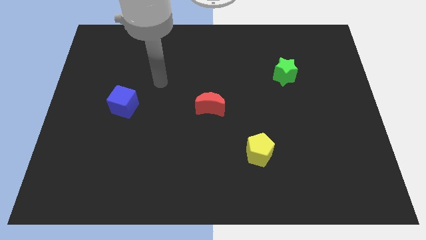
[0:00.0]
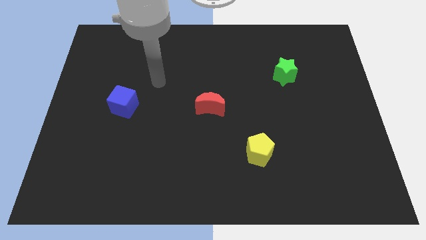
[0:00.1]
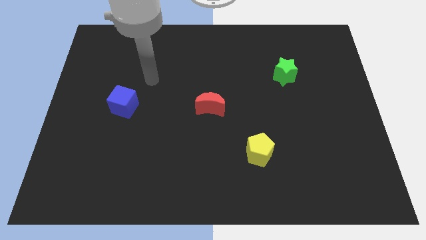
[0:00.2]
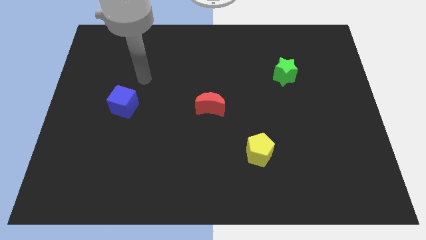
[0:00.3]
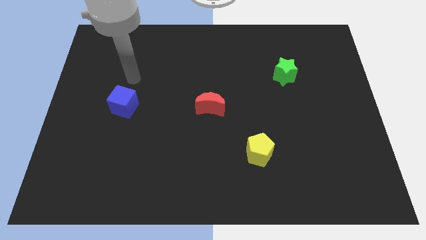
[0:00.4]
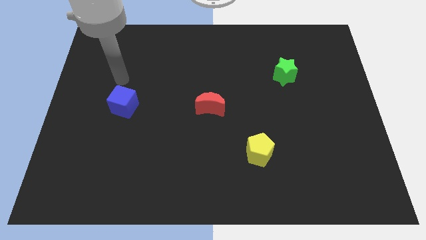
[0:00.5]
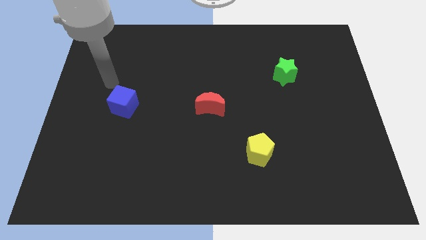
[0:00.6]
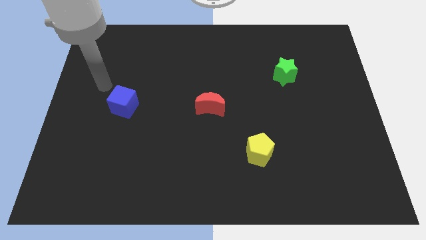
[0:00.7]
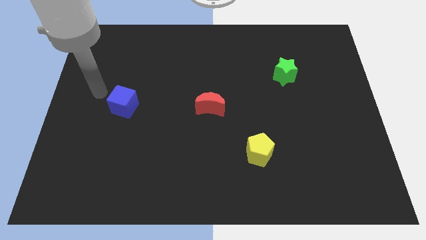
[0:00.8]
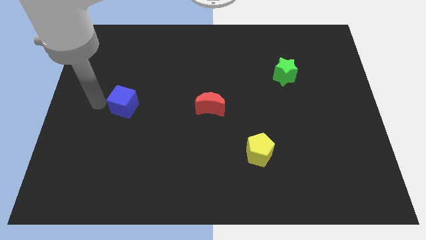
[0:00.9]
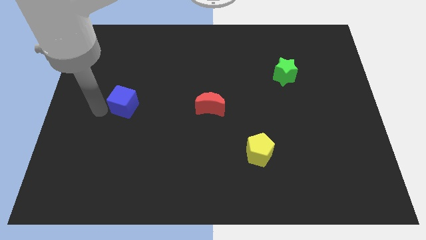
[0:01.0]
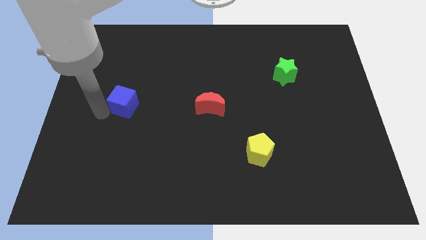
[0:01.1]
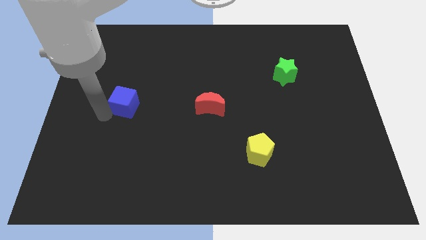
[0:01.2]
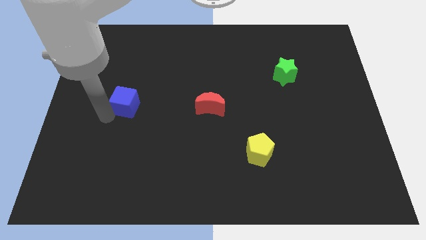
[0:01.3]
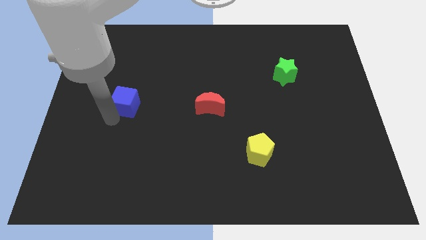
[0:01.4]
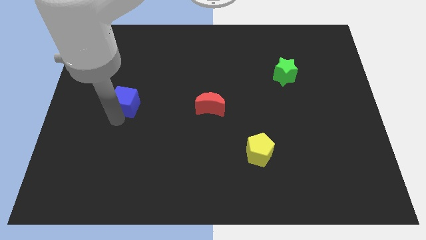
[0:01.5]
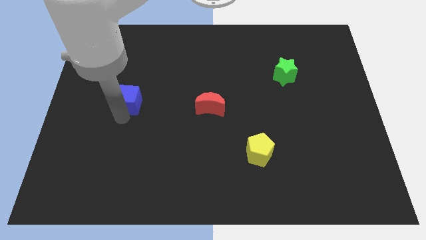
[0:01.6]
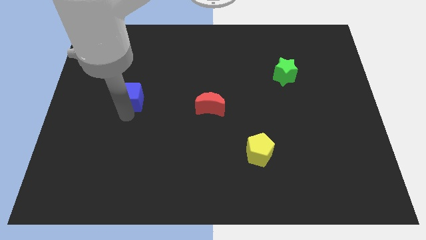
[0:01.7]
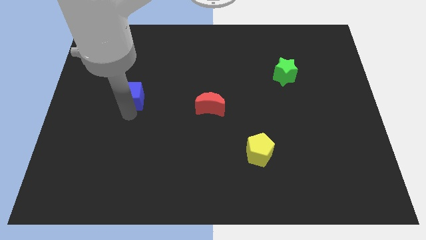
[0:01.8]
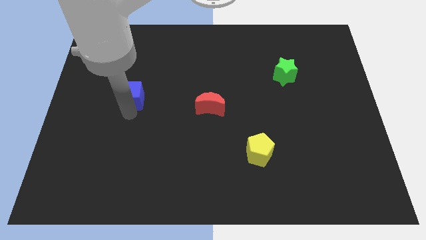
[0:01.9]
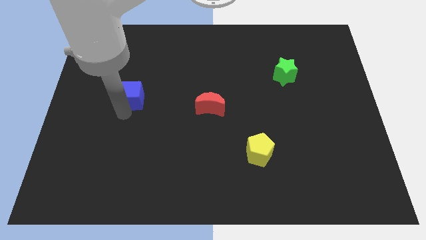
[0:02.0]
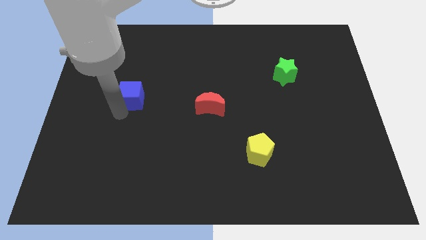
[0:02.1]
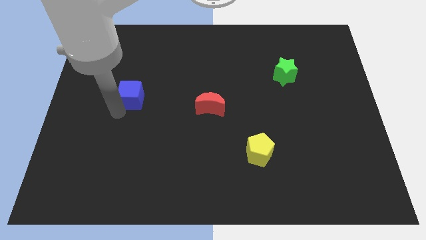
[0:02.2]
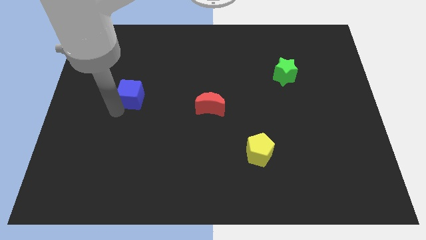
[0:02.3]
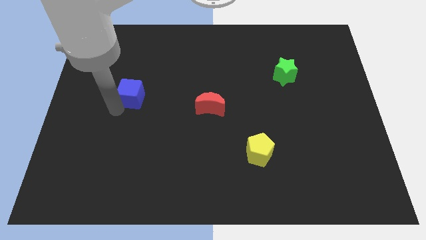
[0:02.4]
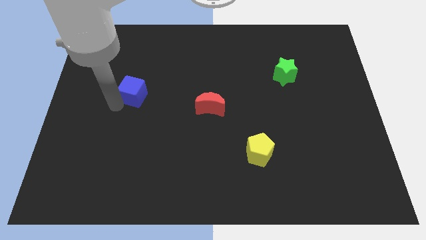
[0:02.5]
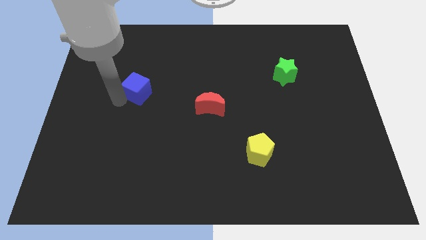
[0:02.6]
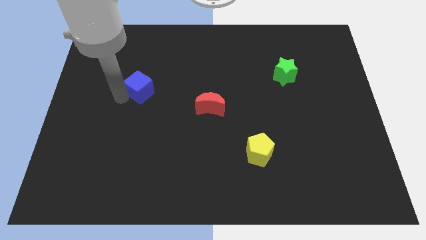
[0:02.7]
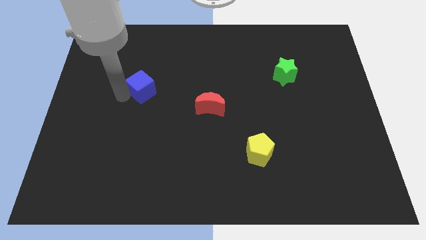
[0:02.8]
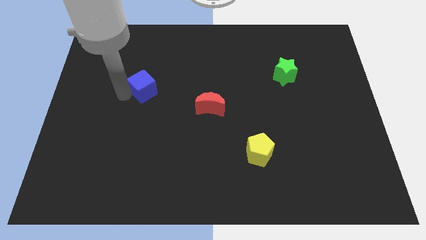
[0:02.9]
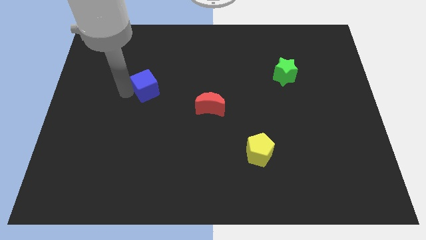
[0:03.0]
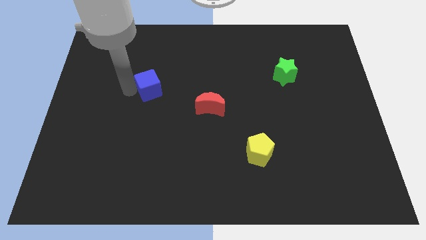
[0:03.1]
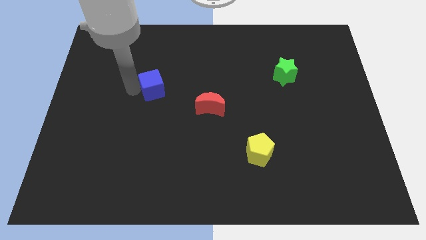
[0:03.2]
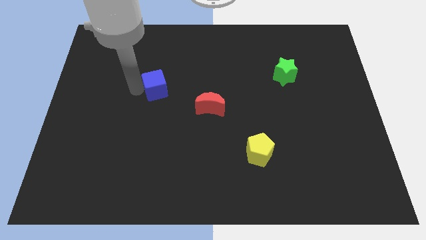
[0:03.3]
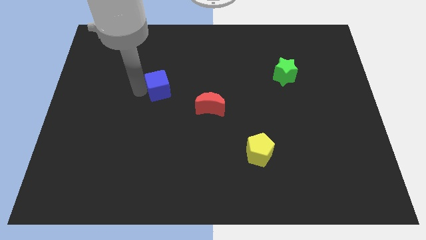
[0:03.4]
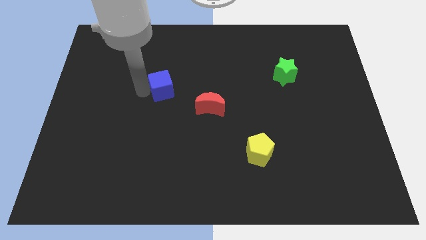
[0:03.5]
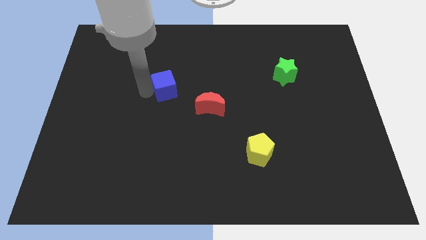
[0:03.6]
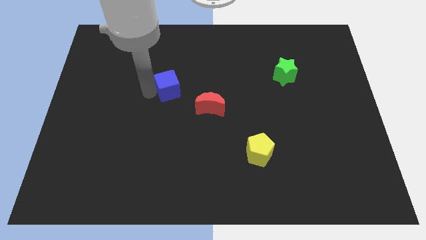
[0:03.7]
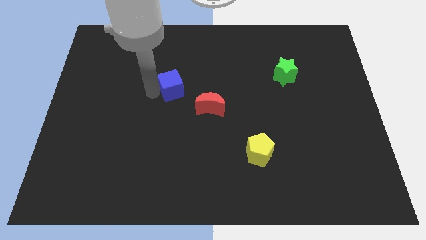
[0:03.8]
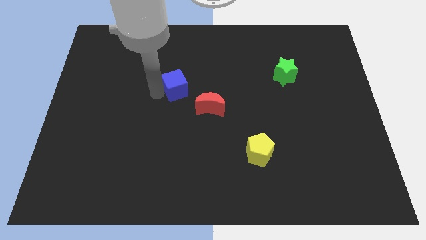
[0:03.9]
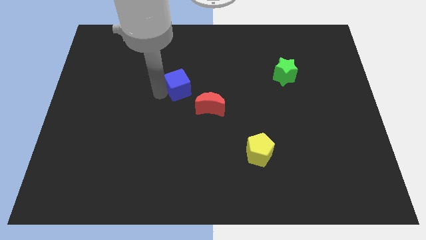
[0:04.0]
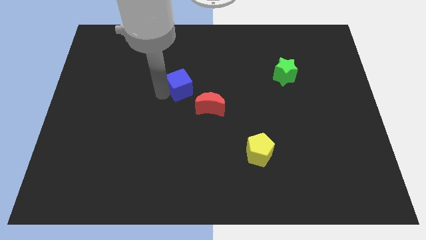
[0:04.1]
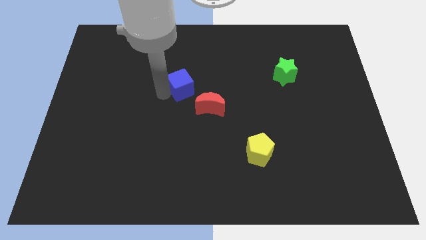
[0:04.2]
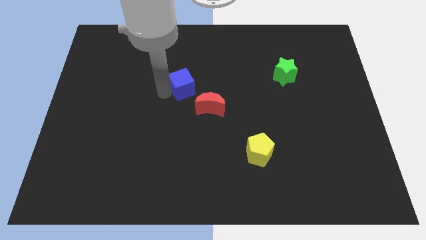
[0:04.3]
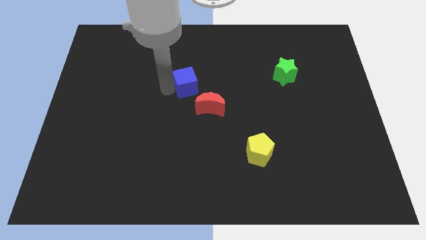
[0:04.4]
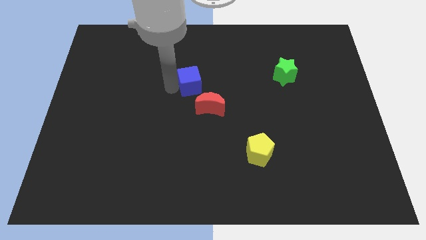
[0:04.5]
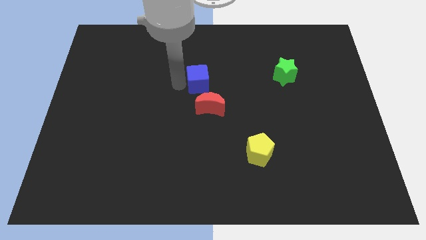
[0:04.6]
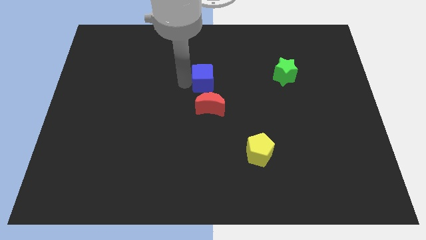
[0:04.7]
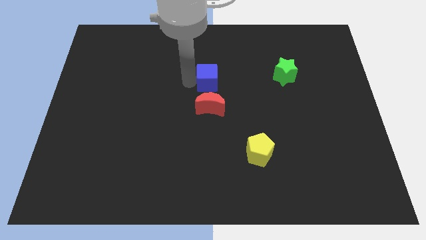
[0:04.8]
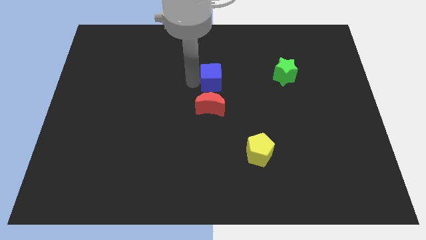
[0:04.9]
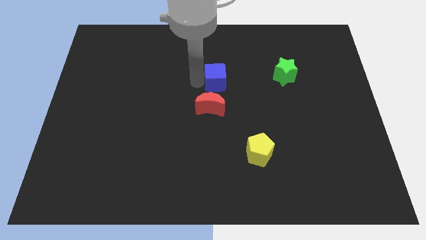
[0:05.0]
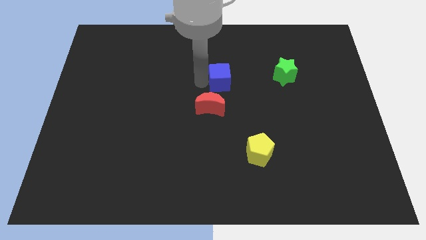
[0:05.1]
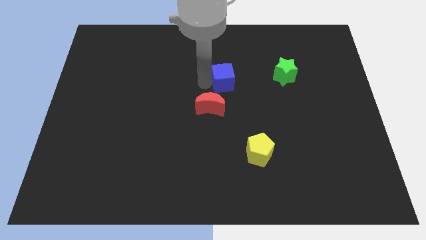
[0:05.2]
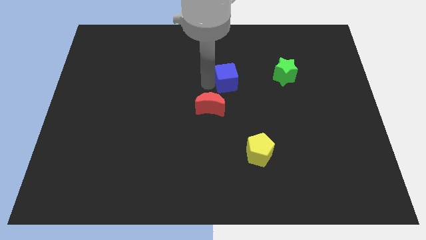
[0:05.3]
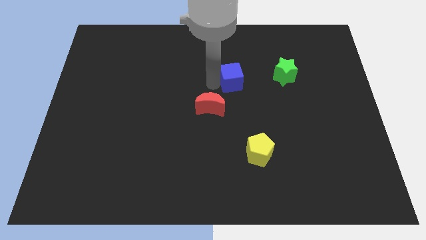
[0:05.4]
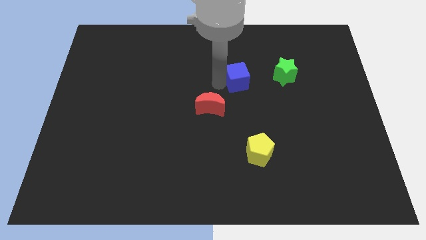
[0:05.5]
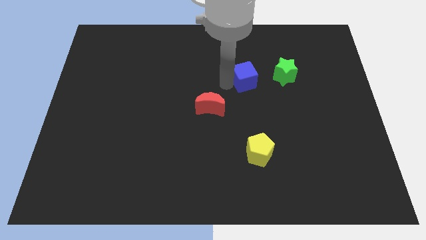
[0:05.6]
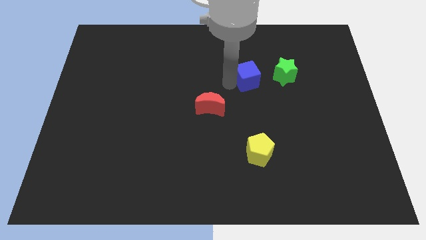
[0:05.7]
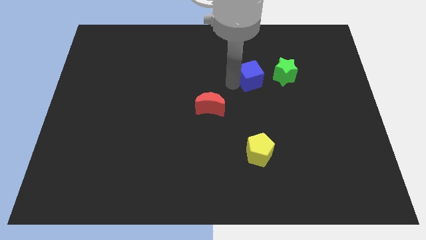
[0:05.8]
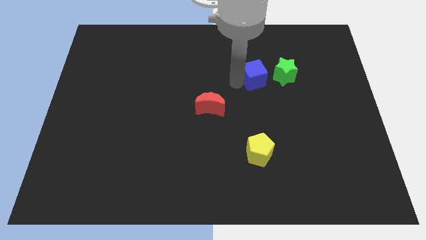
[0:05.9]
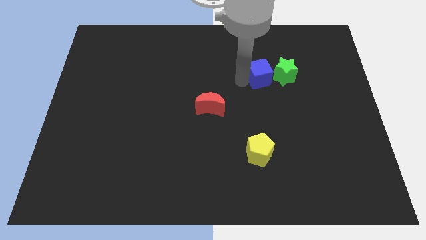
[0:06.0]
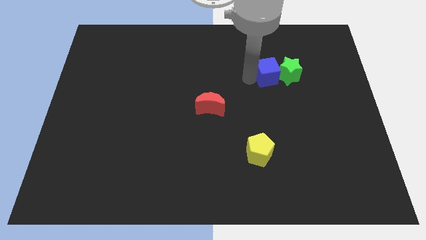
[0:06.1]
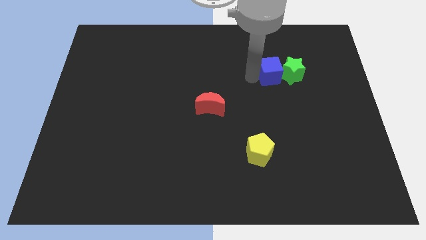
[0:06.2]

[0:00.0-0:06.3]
put the blue cube towards the green block

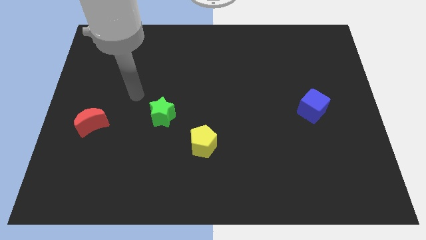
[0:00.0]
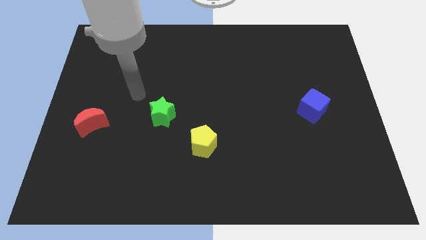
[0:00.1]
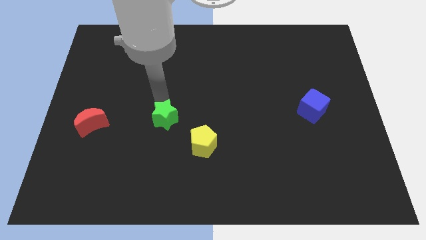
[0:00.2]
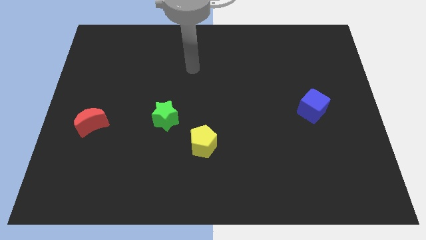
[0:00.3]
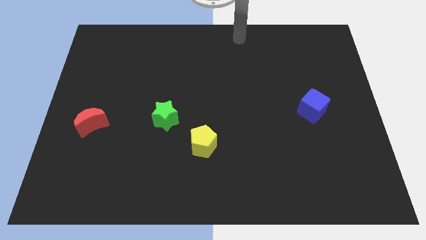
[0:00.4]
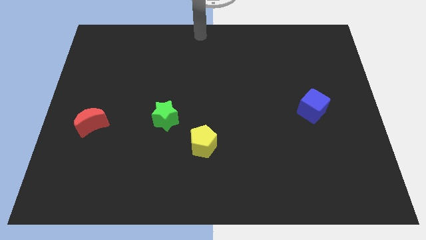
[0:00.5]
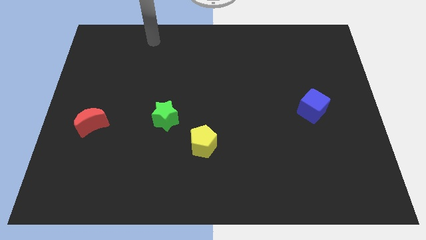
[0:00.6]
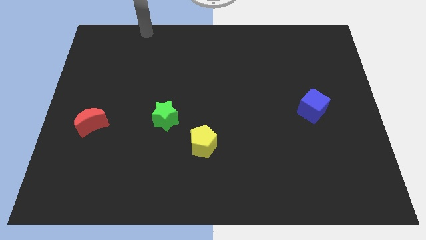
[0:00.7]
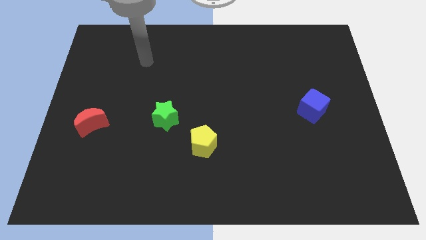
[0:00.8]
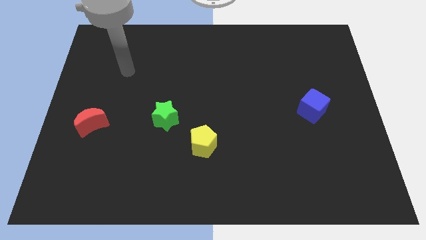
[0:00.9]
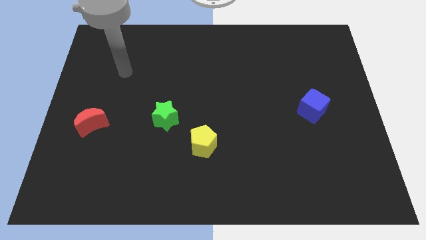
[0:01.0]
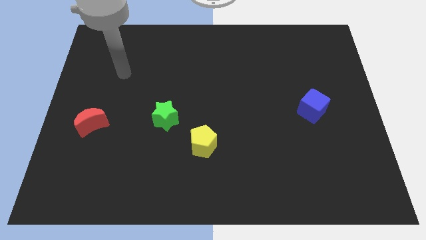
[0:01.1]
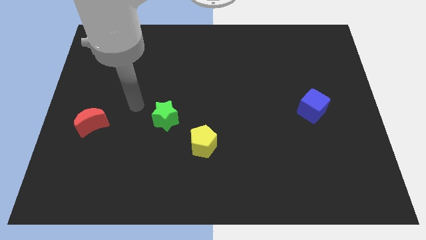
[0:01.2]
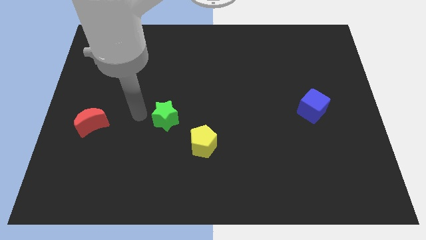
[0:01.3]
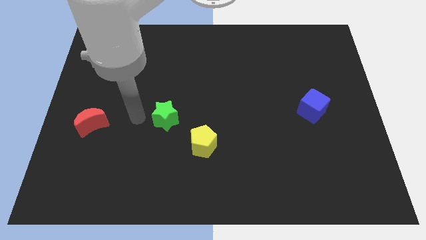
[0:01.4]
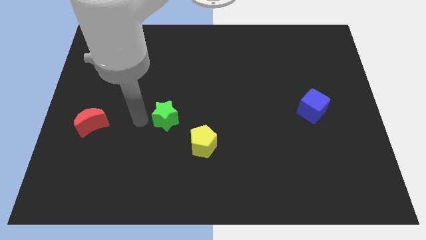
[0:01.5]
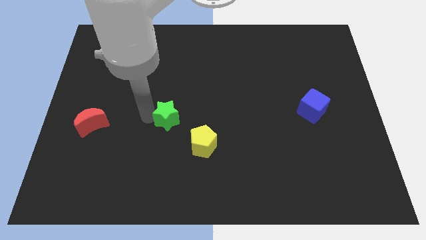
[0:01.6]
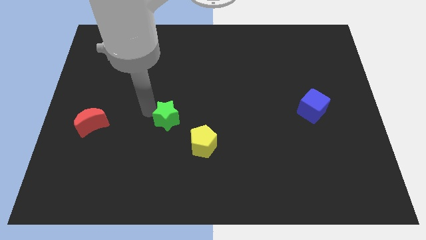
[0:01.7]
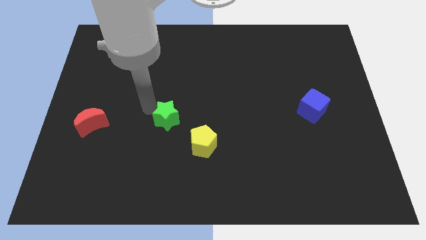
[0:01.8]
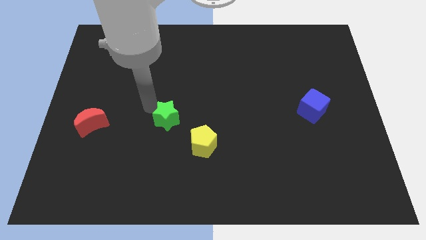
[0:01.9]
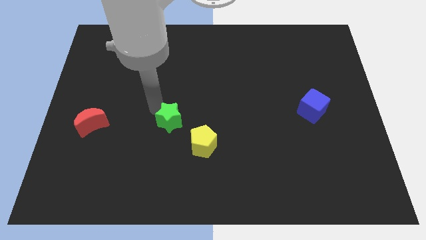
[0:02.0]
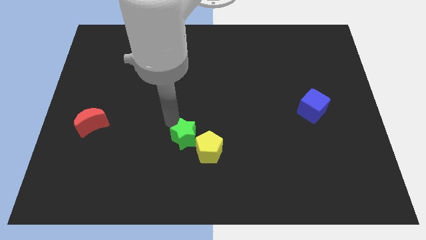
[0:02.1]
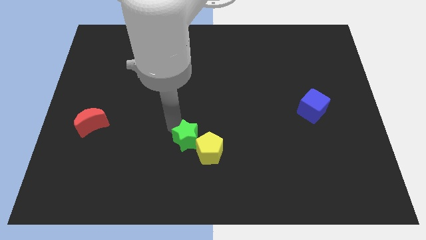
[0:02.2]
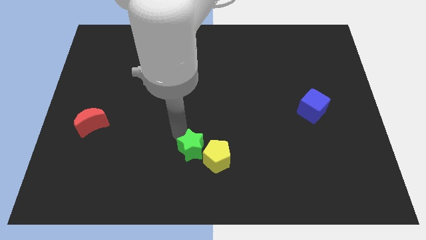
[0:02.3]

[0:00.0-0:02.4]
slide the star to the yellow pentagon
